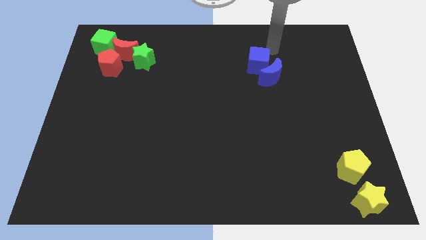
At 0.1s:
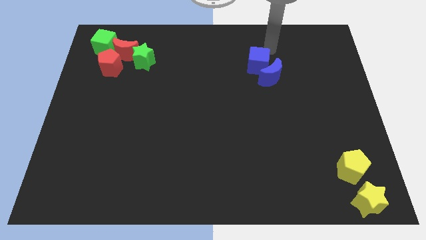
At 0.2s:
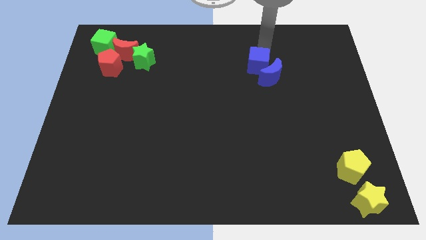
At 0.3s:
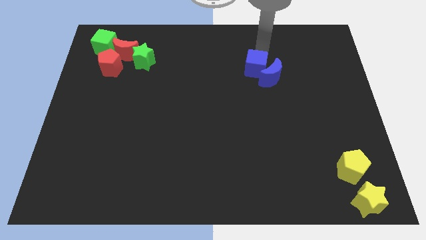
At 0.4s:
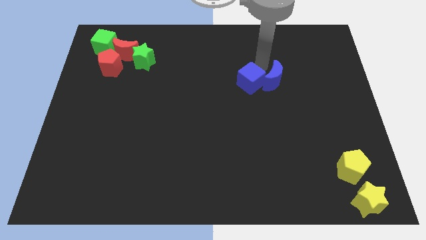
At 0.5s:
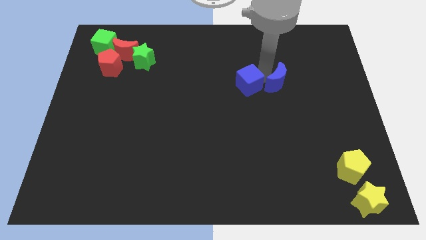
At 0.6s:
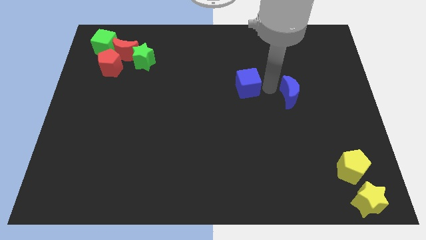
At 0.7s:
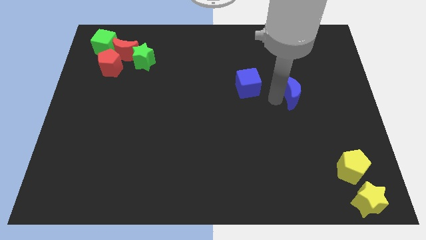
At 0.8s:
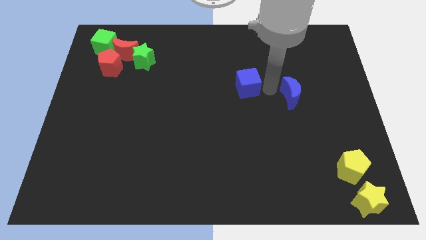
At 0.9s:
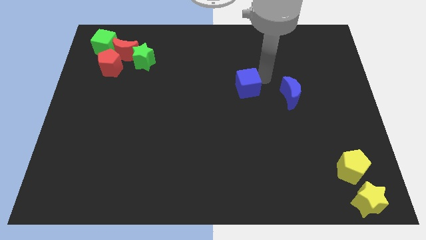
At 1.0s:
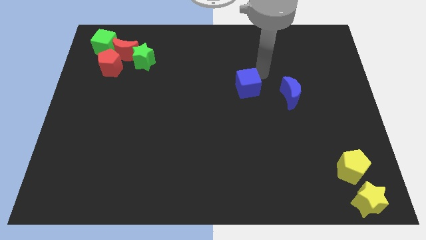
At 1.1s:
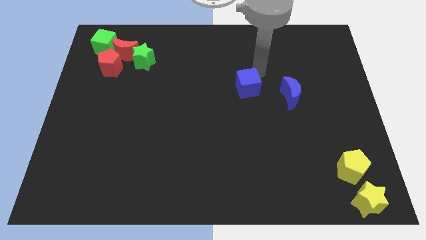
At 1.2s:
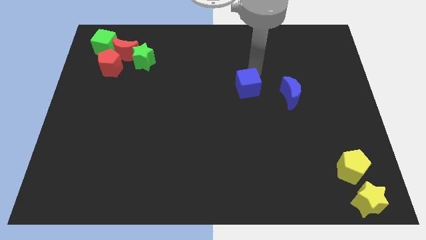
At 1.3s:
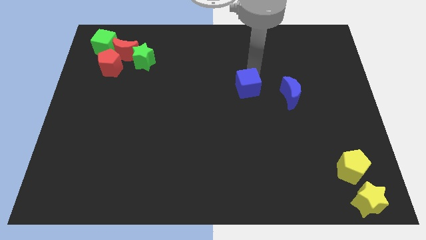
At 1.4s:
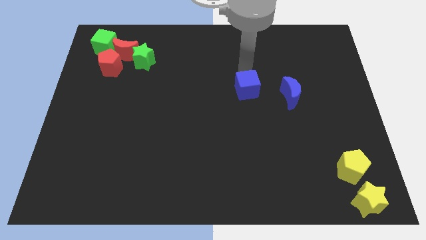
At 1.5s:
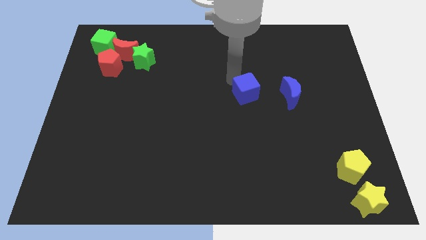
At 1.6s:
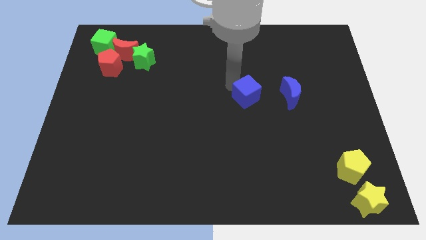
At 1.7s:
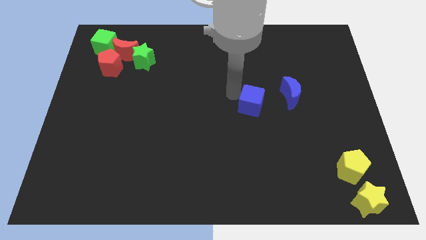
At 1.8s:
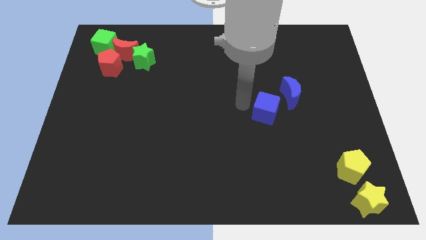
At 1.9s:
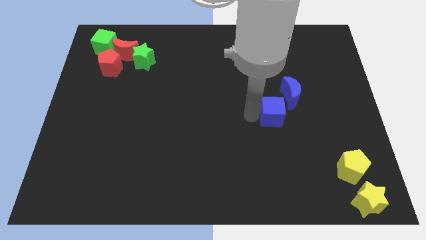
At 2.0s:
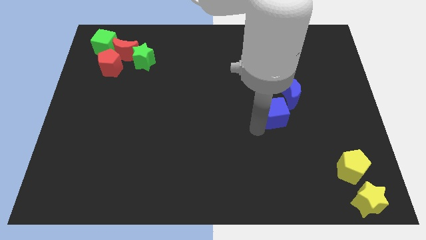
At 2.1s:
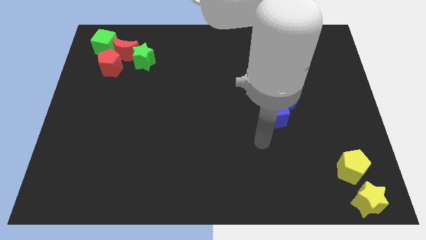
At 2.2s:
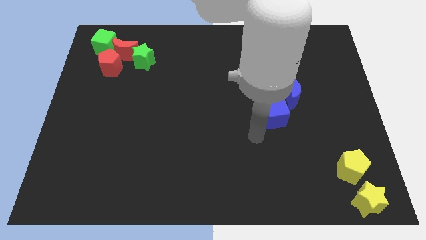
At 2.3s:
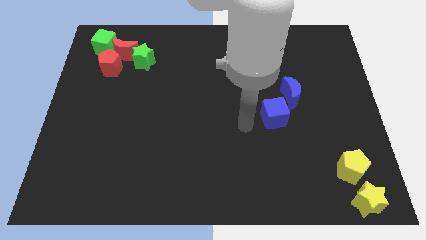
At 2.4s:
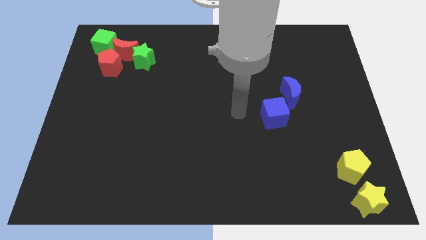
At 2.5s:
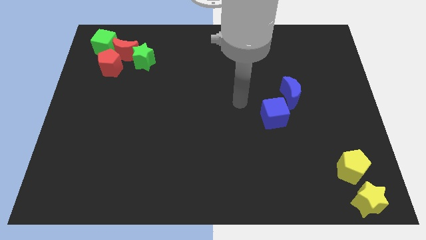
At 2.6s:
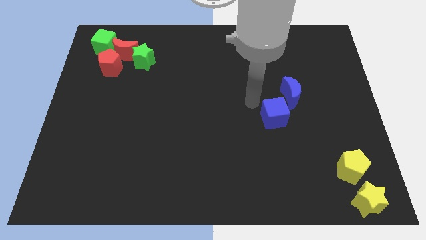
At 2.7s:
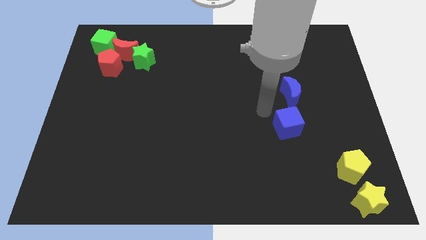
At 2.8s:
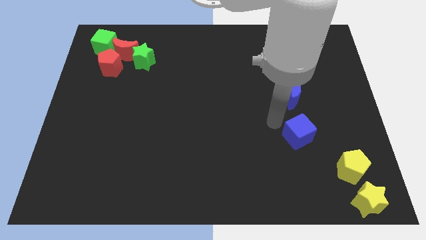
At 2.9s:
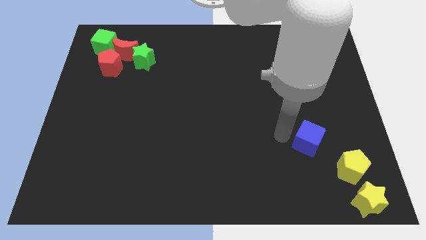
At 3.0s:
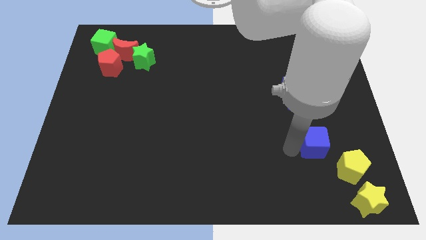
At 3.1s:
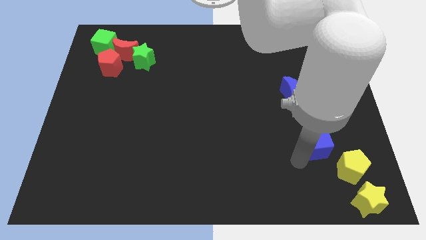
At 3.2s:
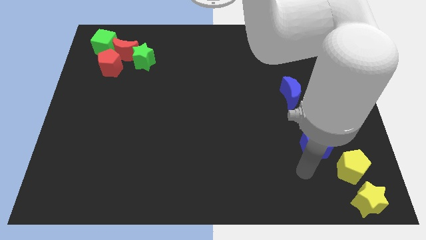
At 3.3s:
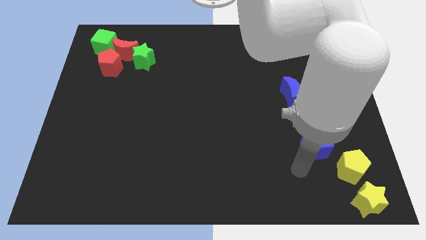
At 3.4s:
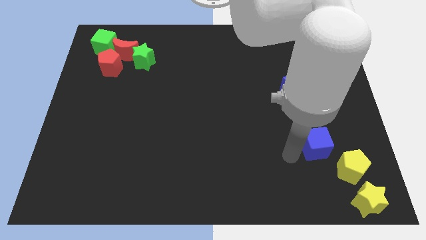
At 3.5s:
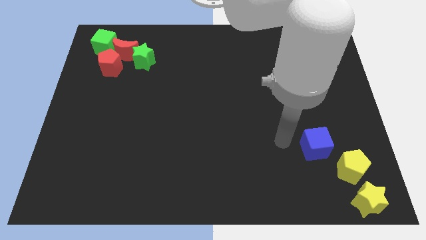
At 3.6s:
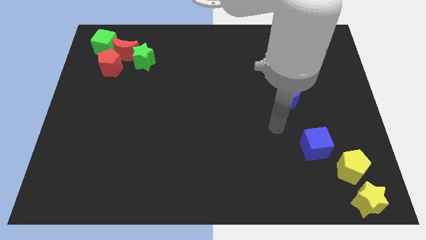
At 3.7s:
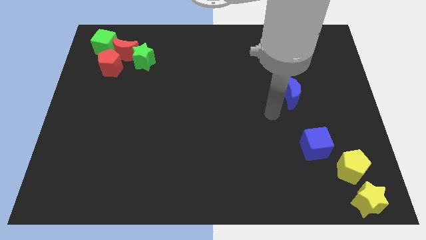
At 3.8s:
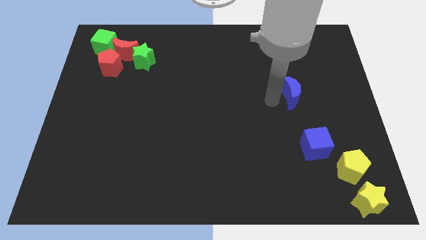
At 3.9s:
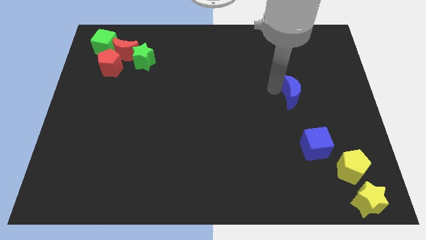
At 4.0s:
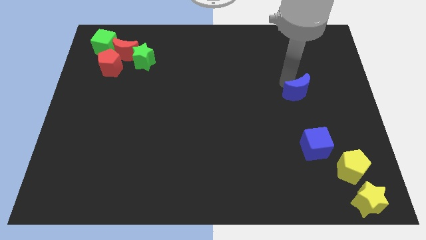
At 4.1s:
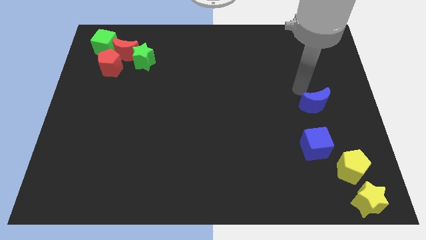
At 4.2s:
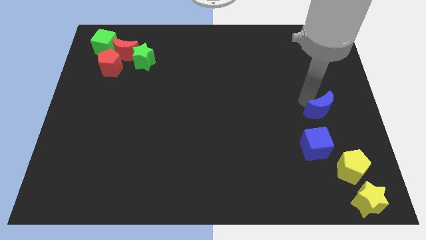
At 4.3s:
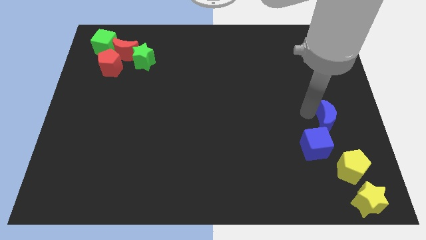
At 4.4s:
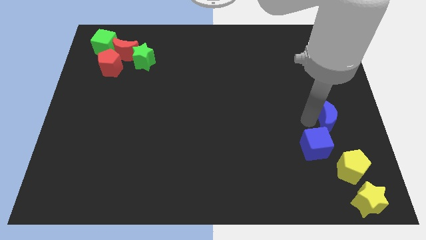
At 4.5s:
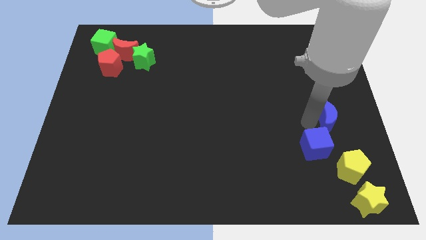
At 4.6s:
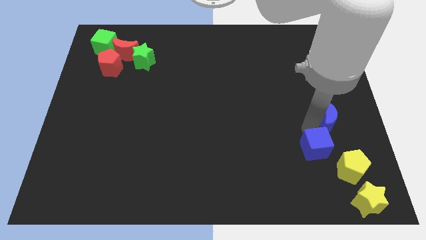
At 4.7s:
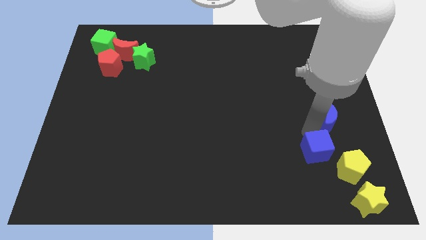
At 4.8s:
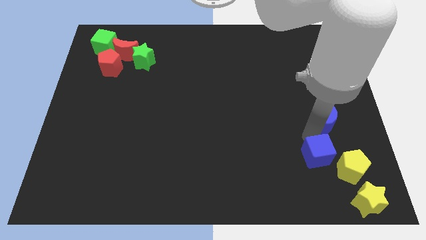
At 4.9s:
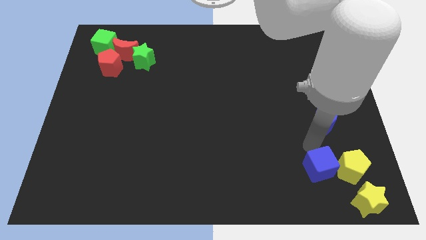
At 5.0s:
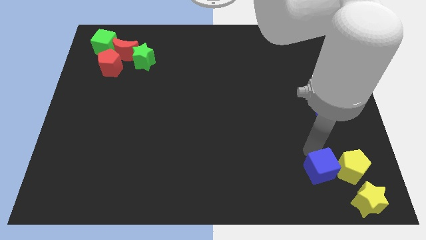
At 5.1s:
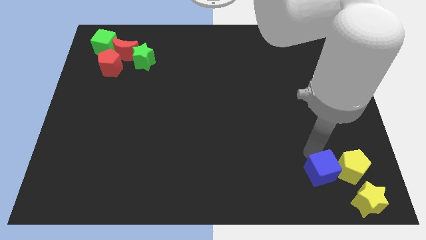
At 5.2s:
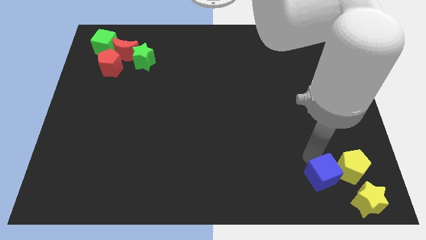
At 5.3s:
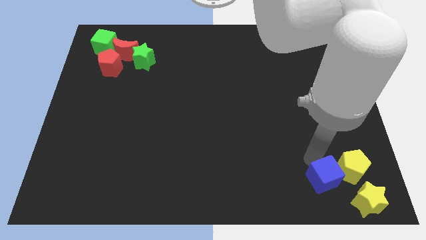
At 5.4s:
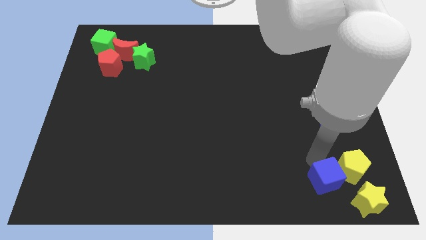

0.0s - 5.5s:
push the blue cube towards the yellow pentagon

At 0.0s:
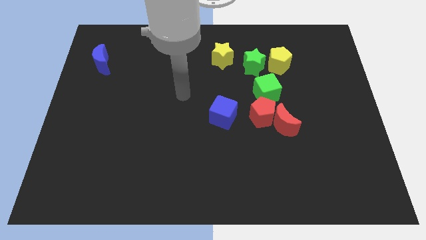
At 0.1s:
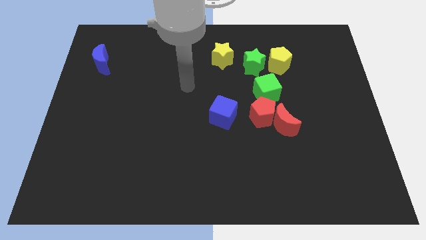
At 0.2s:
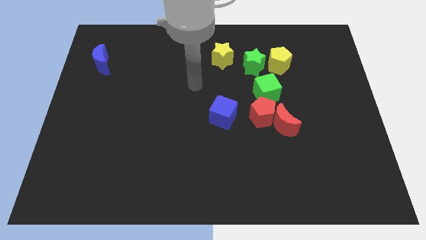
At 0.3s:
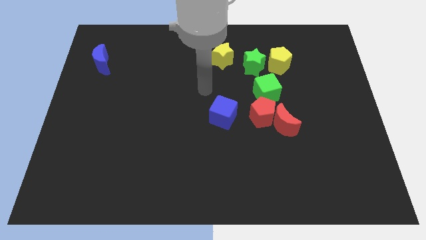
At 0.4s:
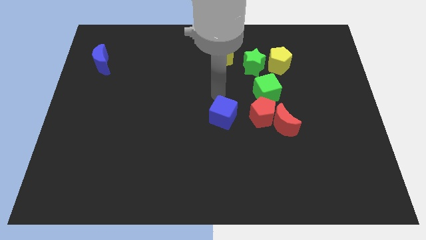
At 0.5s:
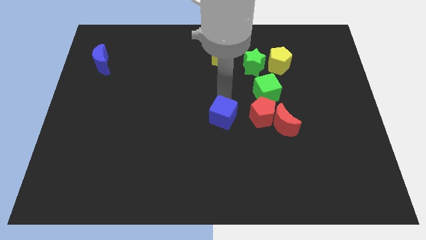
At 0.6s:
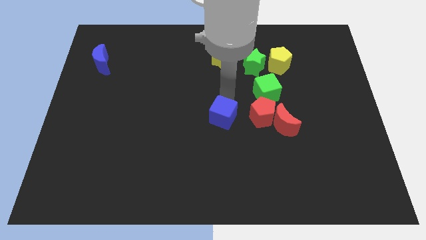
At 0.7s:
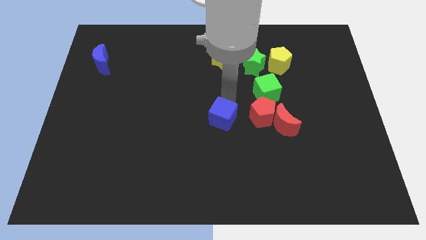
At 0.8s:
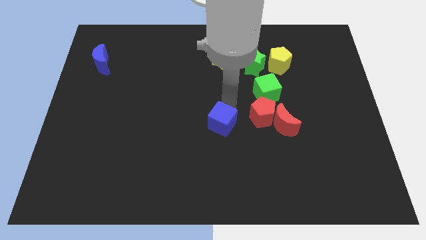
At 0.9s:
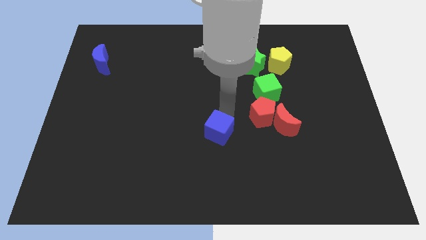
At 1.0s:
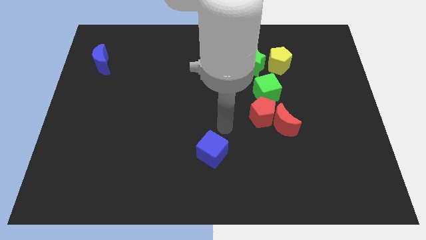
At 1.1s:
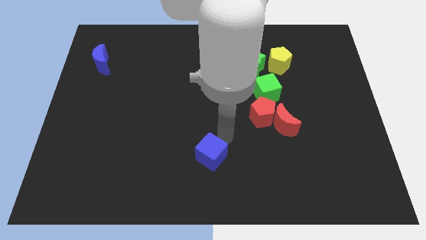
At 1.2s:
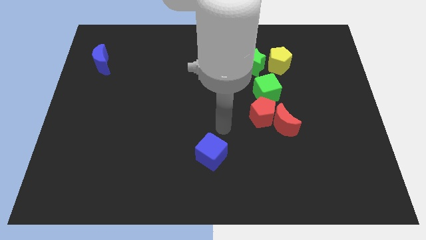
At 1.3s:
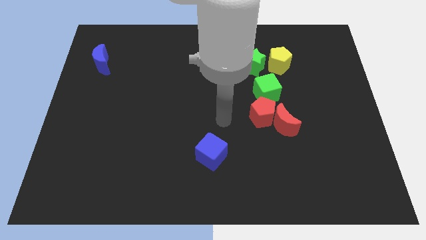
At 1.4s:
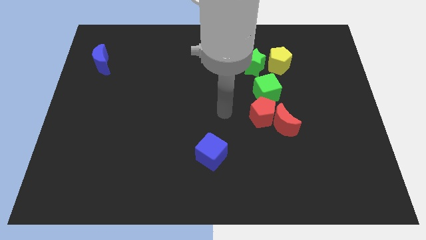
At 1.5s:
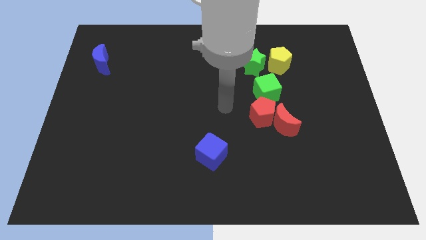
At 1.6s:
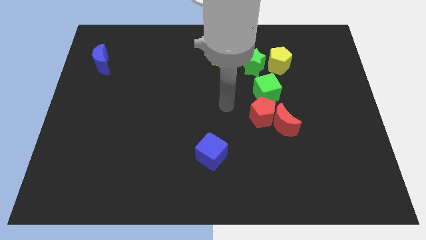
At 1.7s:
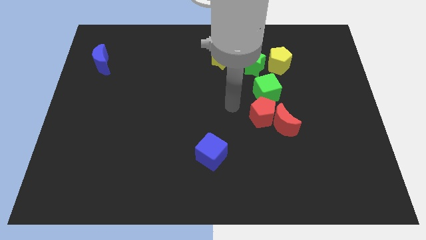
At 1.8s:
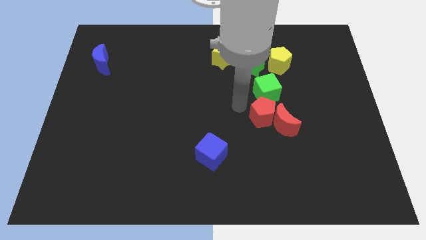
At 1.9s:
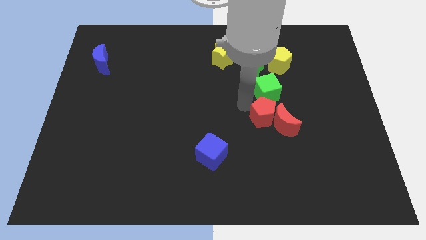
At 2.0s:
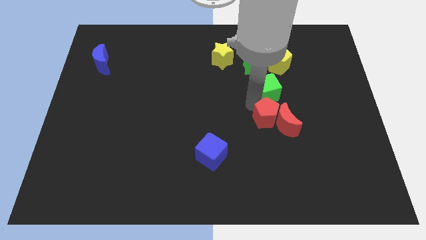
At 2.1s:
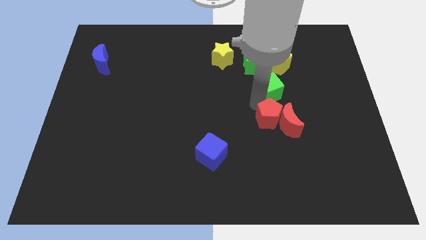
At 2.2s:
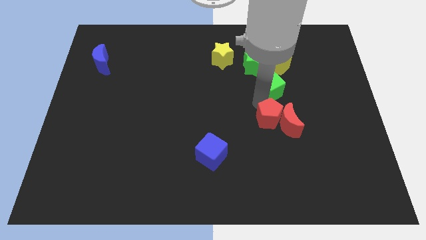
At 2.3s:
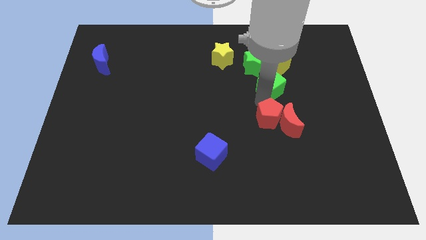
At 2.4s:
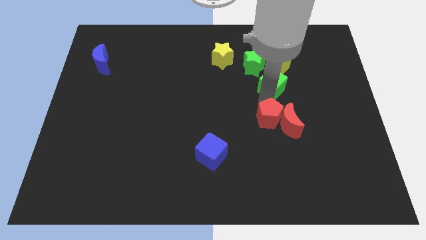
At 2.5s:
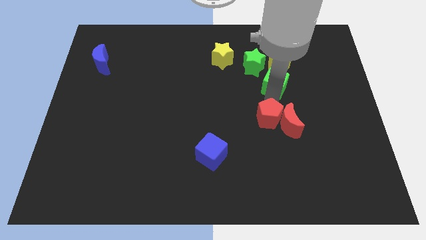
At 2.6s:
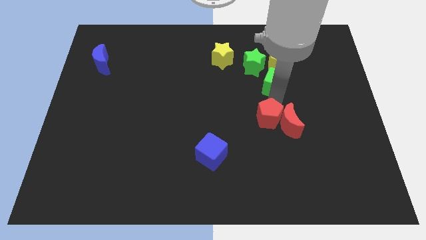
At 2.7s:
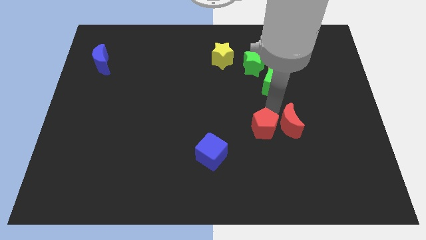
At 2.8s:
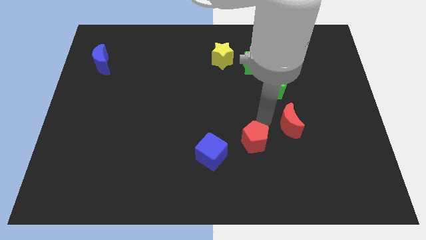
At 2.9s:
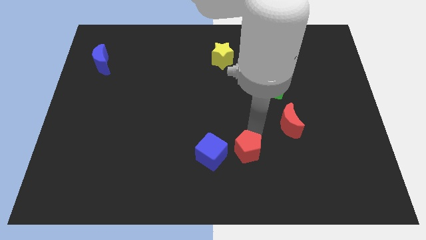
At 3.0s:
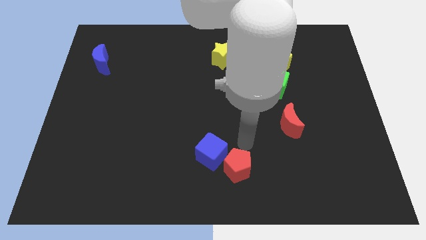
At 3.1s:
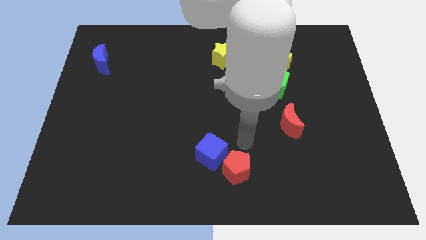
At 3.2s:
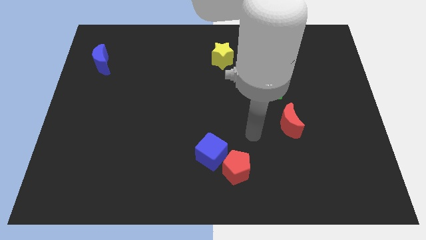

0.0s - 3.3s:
push blue cube along with red pentagon towards bottom center

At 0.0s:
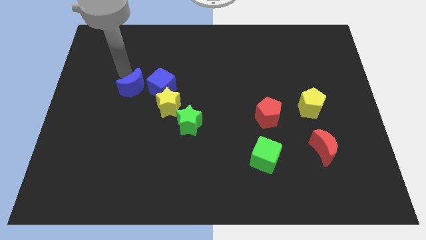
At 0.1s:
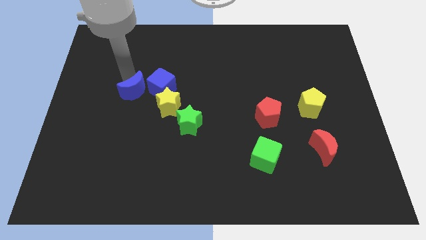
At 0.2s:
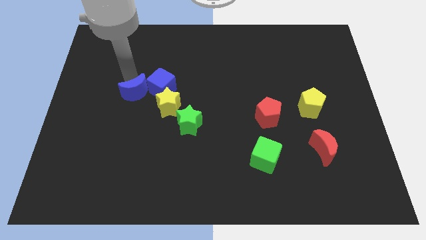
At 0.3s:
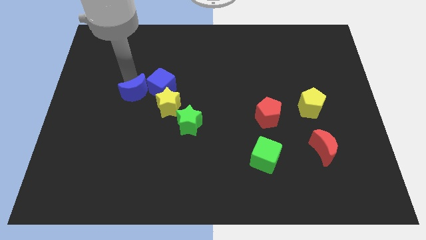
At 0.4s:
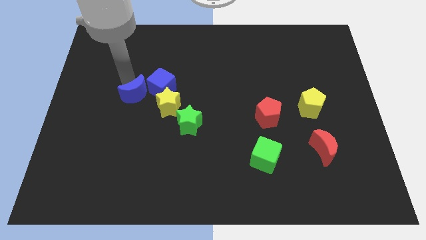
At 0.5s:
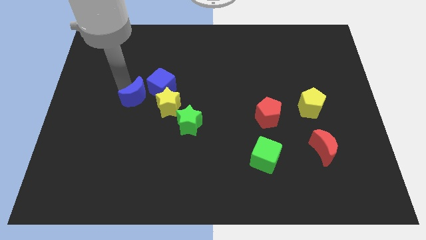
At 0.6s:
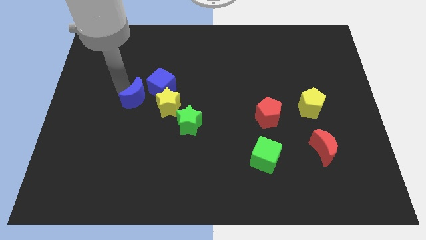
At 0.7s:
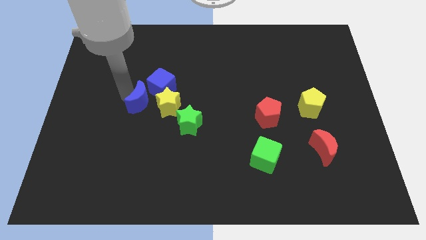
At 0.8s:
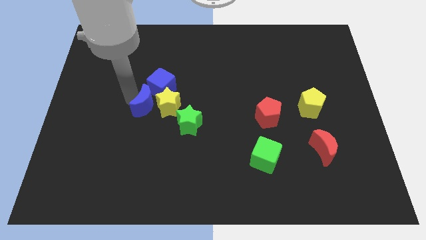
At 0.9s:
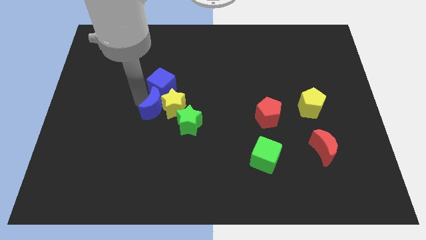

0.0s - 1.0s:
push blue moon close to the yellow star
